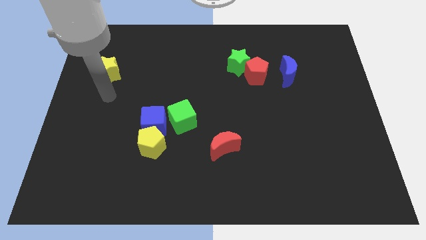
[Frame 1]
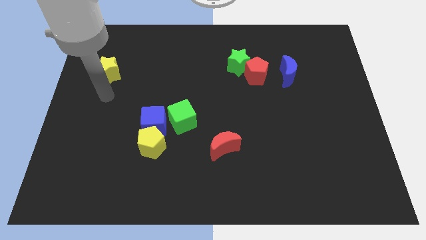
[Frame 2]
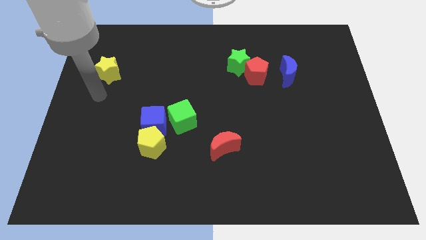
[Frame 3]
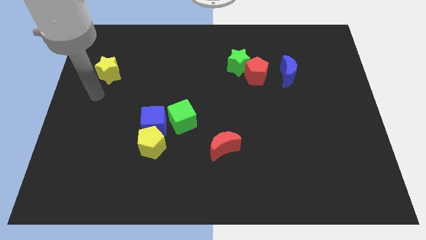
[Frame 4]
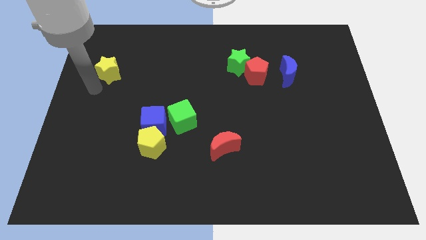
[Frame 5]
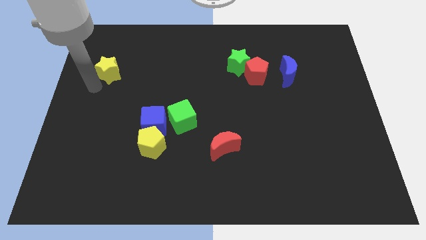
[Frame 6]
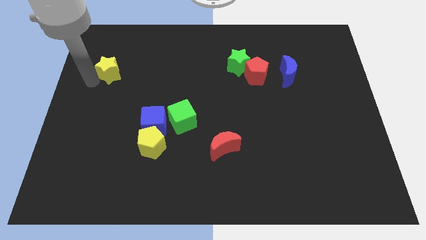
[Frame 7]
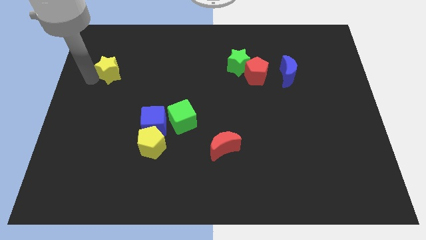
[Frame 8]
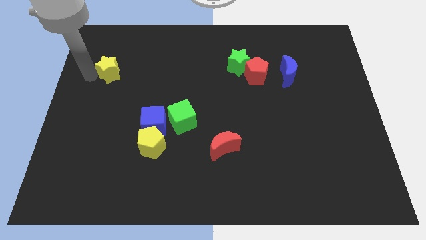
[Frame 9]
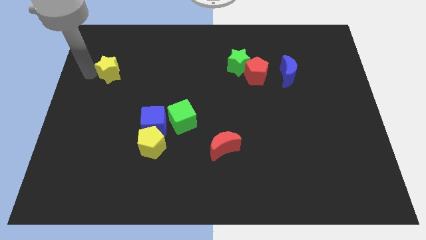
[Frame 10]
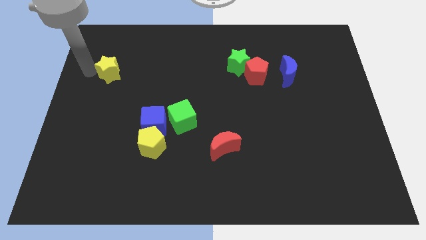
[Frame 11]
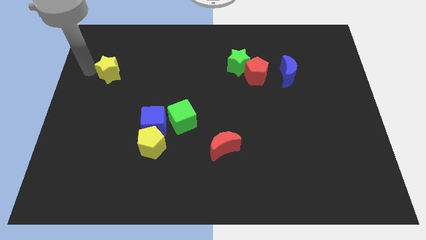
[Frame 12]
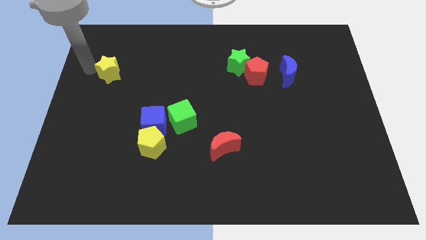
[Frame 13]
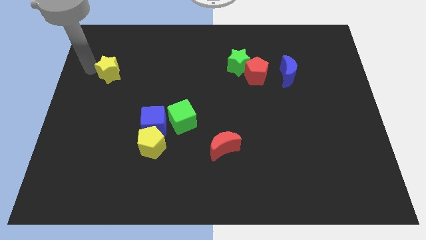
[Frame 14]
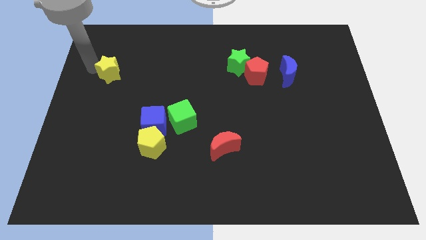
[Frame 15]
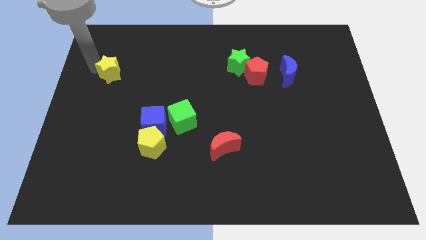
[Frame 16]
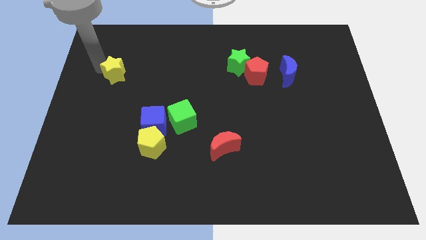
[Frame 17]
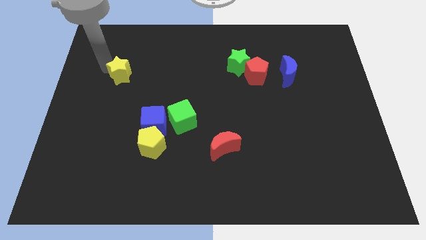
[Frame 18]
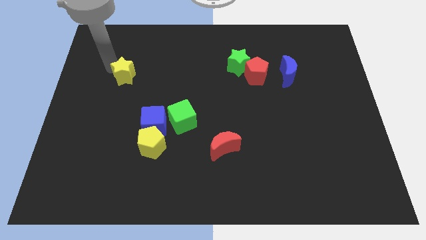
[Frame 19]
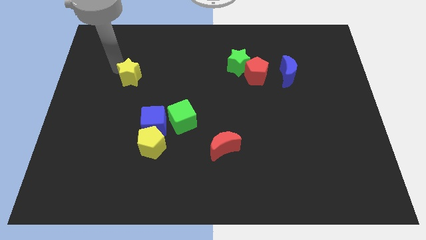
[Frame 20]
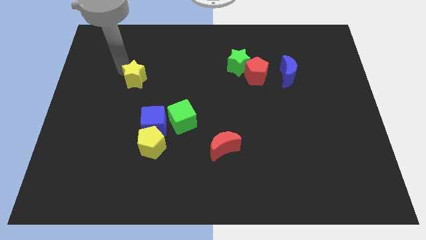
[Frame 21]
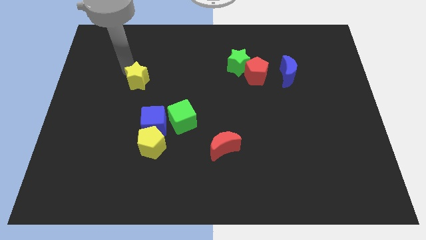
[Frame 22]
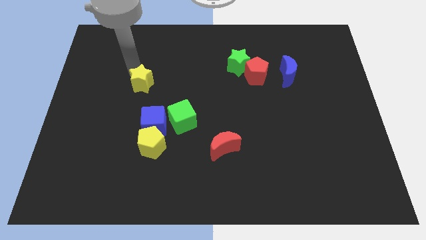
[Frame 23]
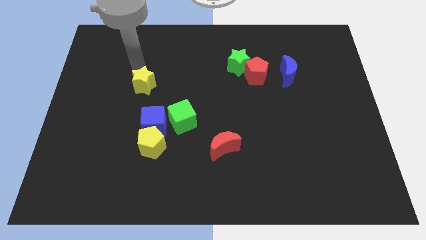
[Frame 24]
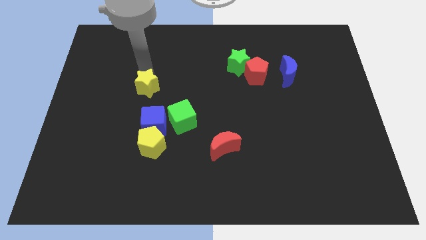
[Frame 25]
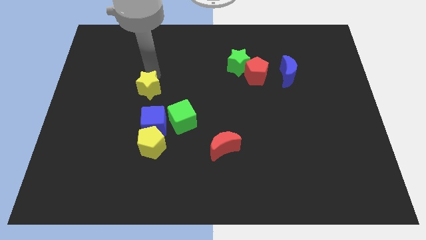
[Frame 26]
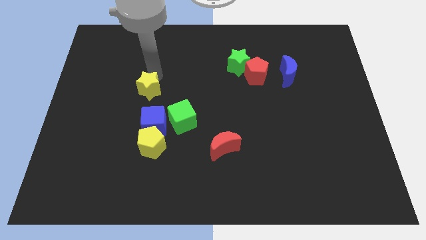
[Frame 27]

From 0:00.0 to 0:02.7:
slide the yellow star vertically above the blue cube

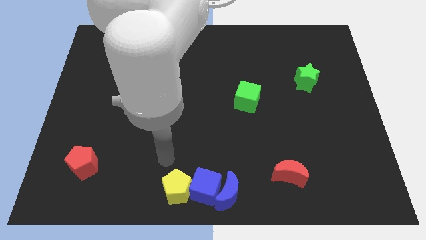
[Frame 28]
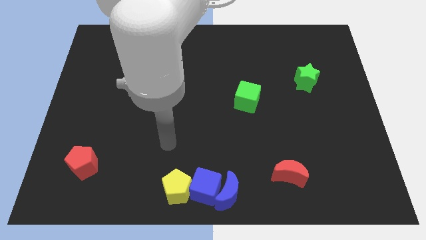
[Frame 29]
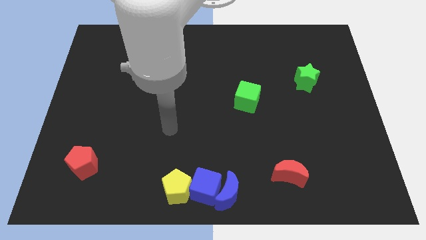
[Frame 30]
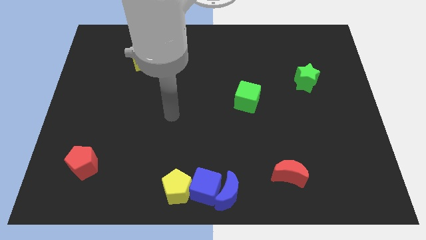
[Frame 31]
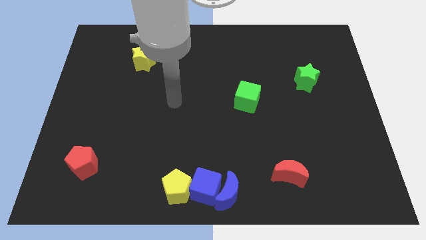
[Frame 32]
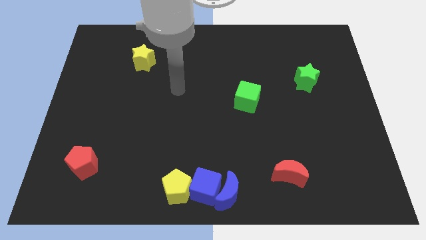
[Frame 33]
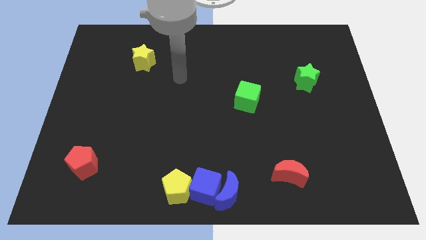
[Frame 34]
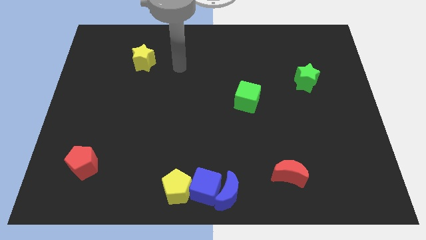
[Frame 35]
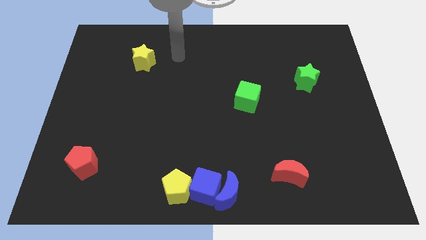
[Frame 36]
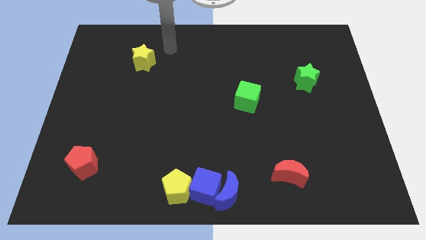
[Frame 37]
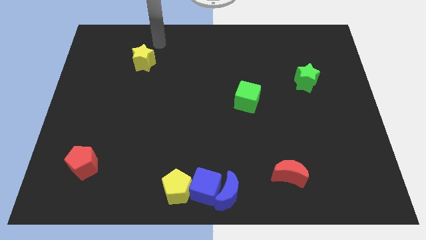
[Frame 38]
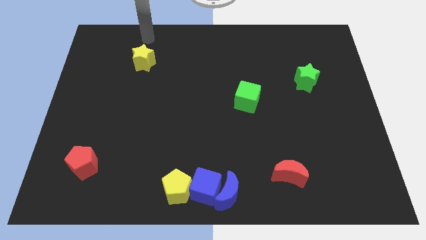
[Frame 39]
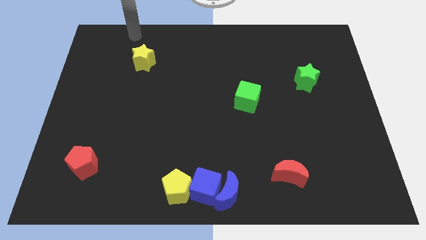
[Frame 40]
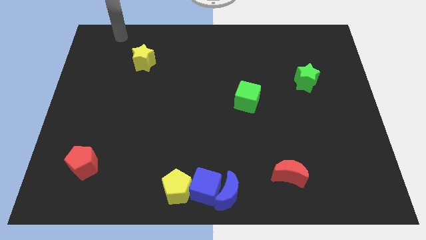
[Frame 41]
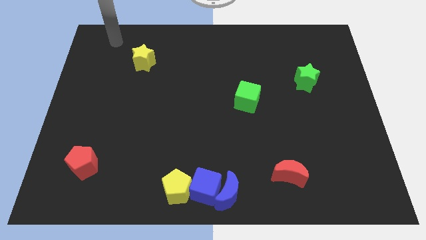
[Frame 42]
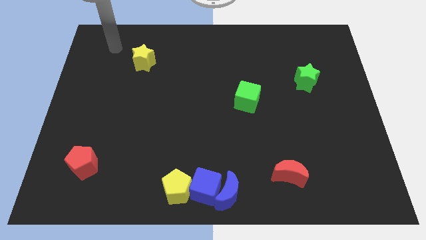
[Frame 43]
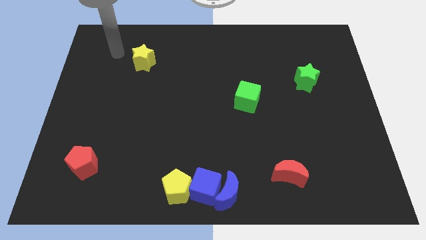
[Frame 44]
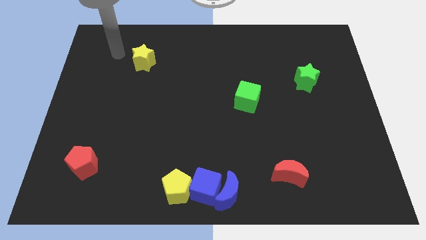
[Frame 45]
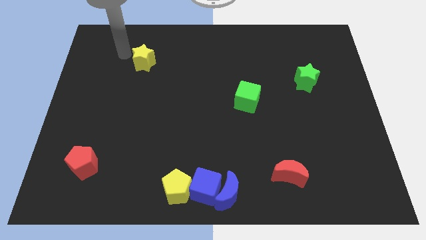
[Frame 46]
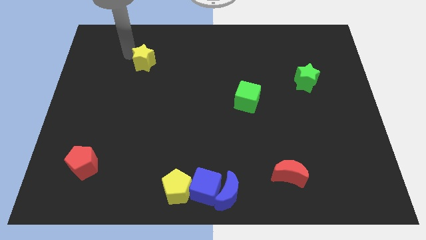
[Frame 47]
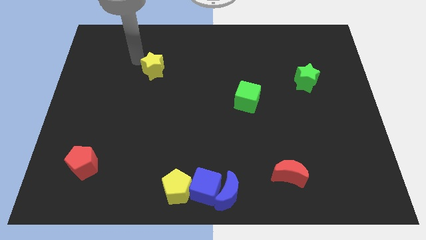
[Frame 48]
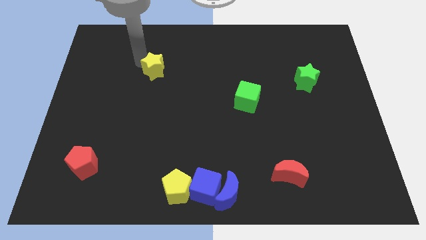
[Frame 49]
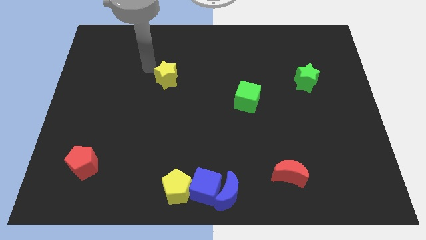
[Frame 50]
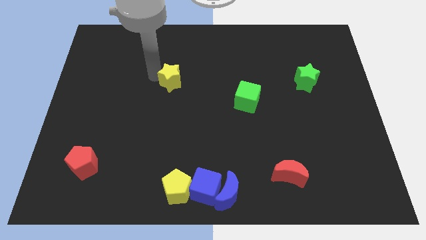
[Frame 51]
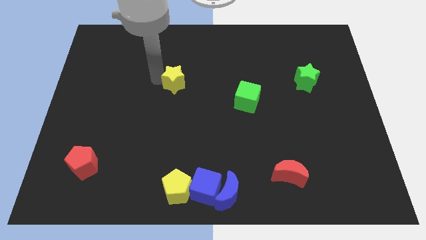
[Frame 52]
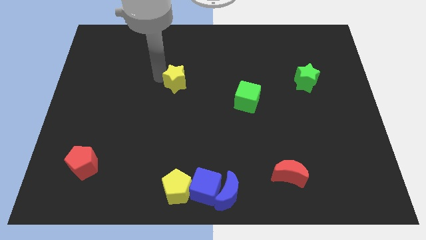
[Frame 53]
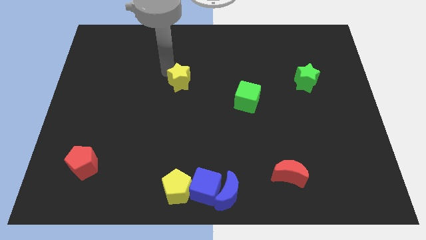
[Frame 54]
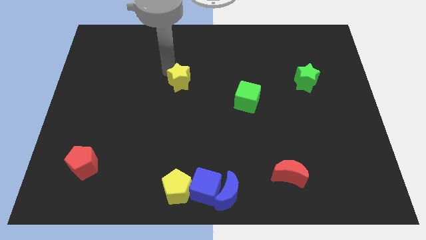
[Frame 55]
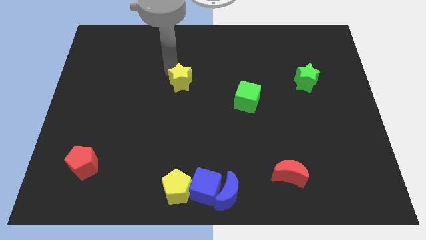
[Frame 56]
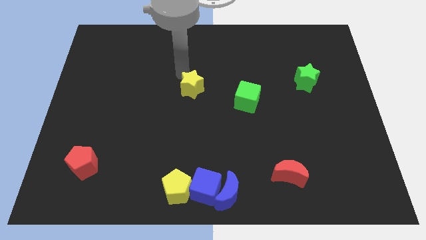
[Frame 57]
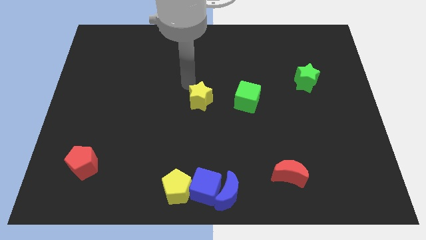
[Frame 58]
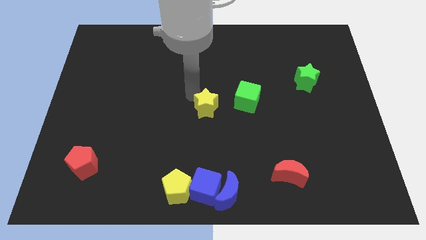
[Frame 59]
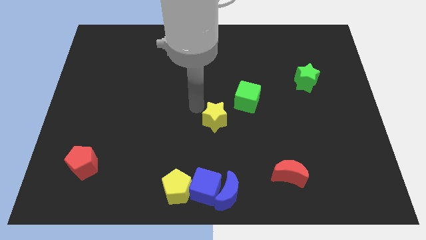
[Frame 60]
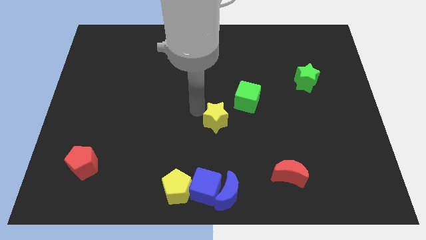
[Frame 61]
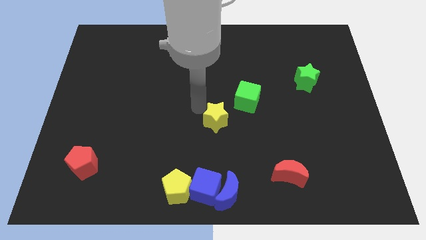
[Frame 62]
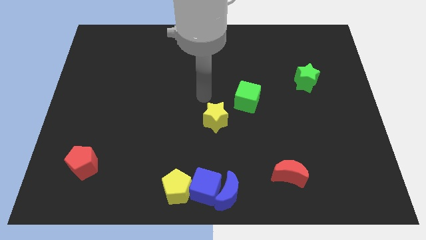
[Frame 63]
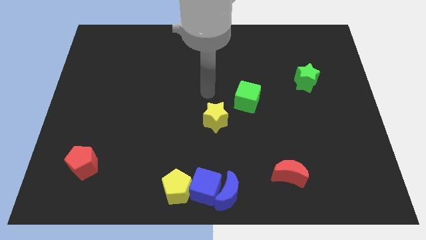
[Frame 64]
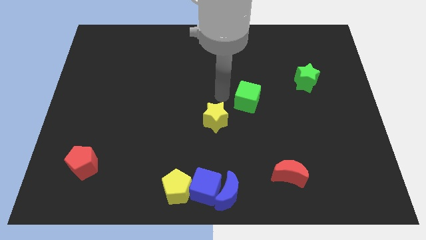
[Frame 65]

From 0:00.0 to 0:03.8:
place the yellow star diagonally below the bottom left side of the green cube

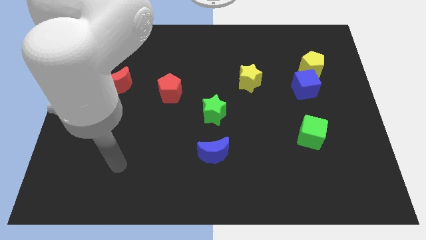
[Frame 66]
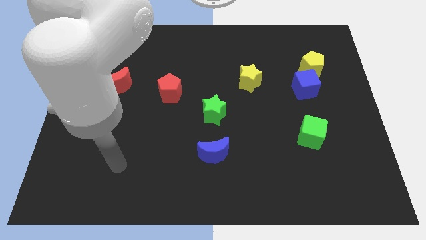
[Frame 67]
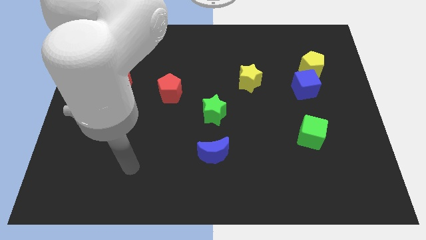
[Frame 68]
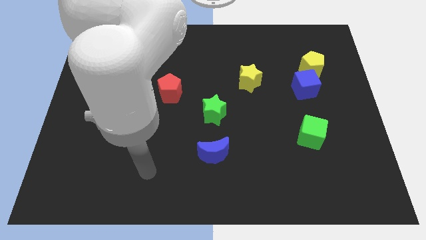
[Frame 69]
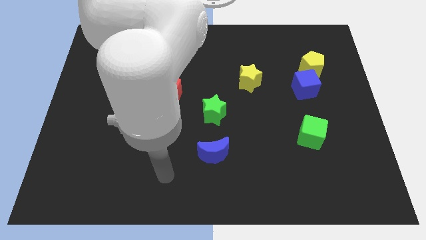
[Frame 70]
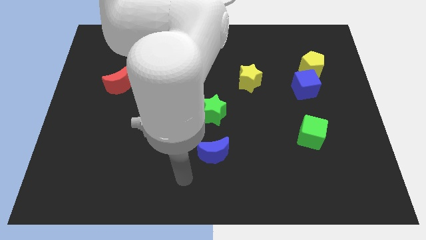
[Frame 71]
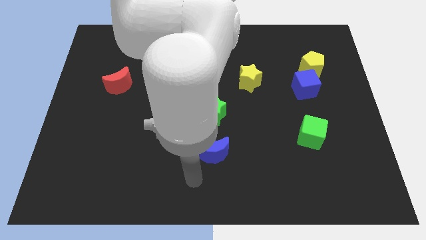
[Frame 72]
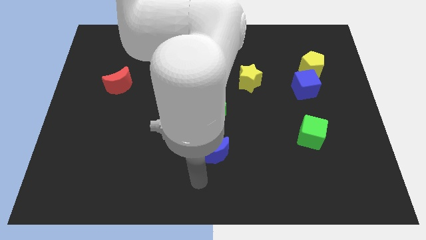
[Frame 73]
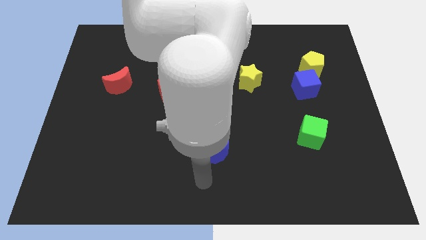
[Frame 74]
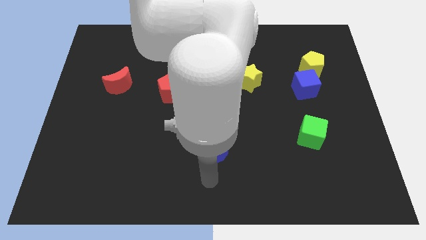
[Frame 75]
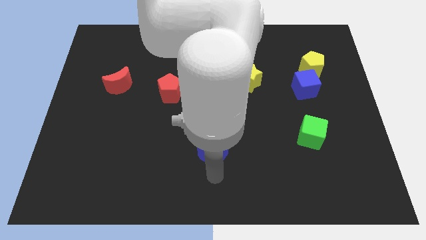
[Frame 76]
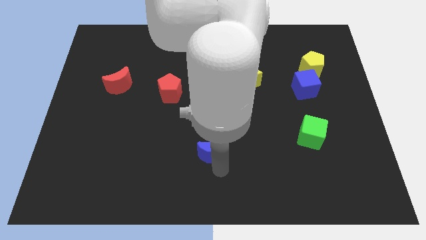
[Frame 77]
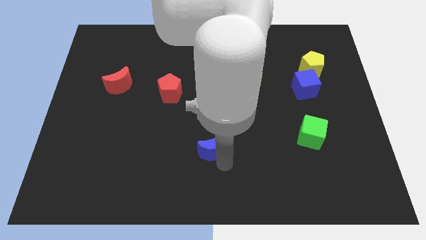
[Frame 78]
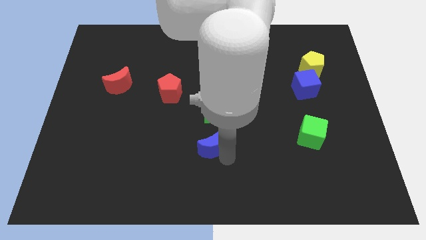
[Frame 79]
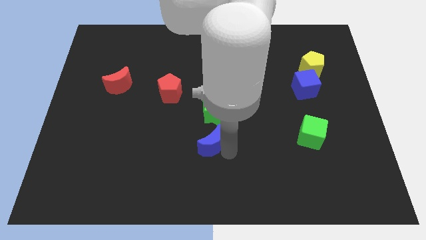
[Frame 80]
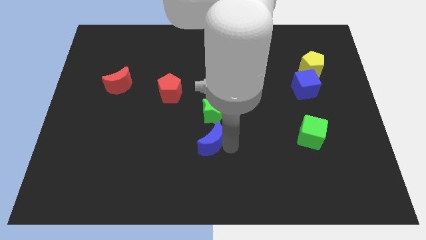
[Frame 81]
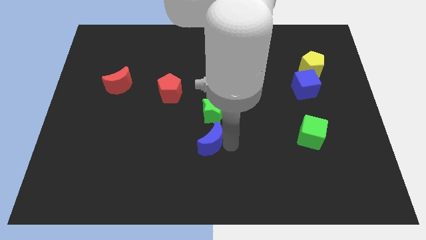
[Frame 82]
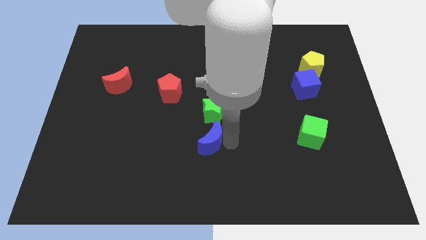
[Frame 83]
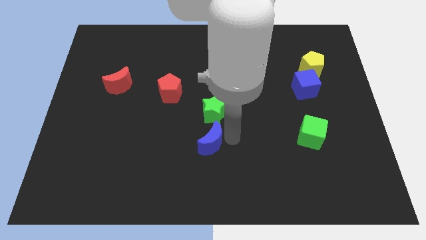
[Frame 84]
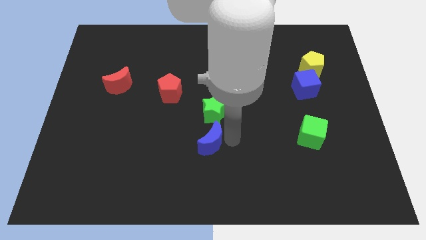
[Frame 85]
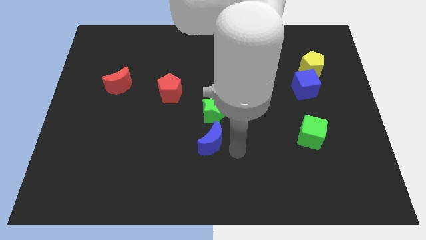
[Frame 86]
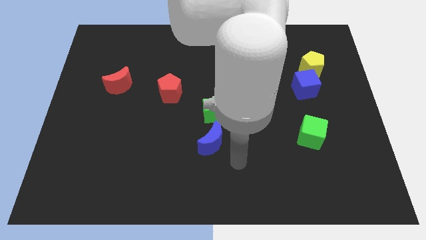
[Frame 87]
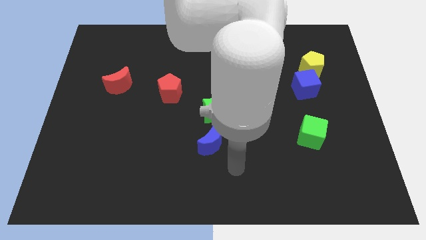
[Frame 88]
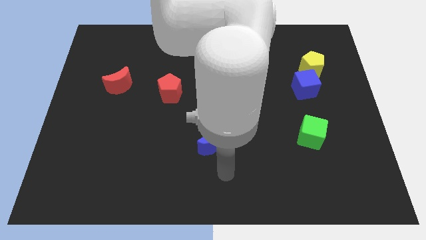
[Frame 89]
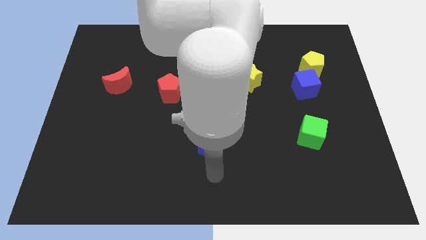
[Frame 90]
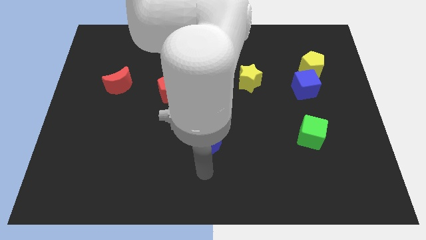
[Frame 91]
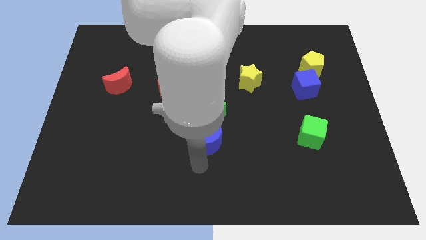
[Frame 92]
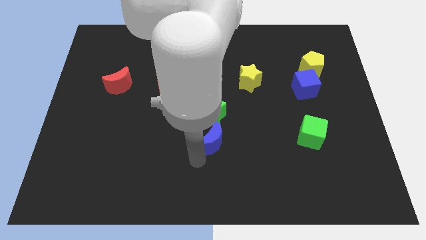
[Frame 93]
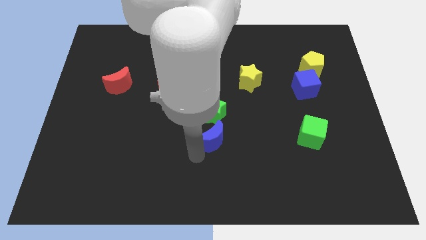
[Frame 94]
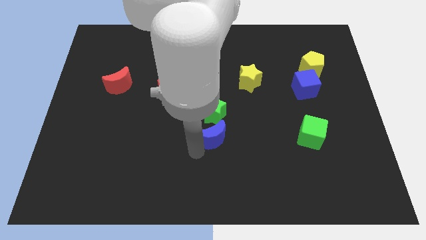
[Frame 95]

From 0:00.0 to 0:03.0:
move blue moon into the green star
